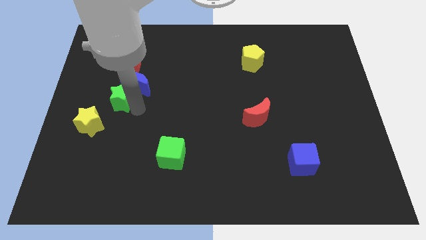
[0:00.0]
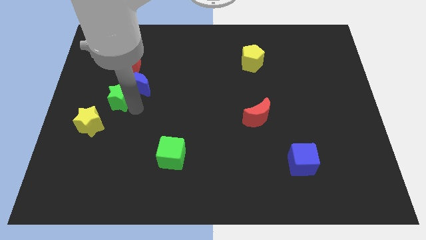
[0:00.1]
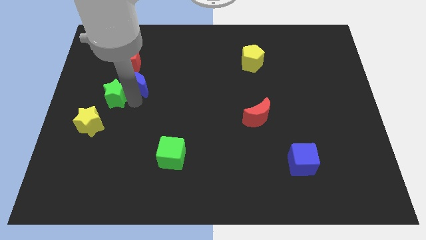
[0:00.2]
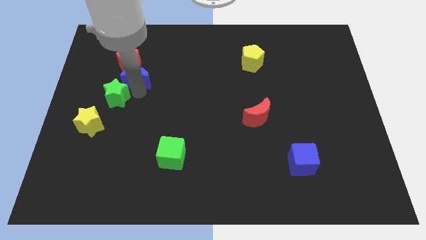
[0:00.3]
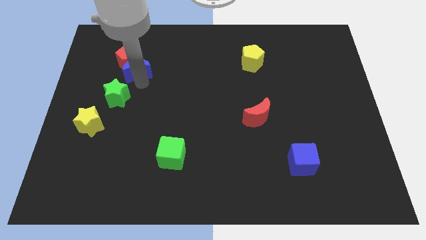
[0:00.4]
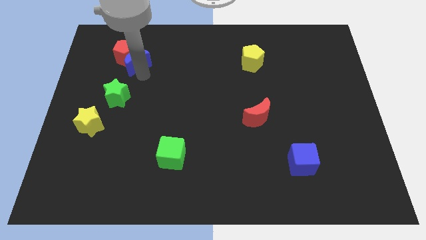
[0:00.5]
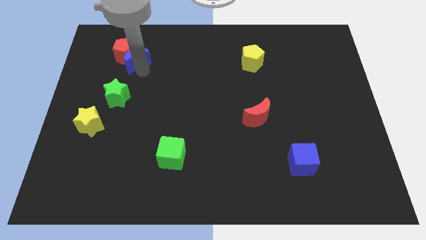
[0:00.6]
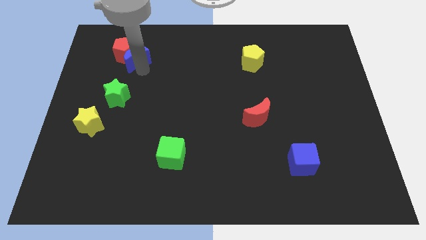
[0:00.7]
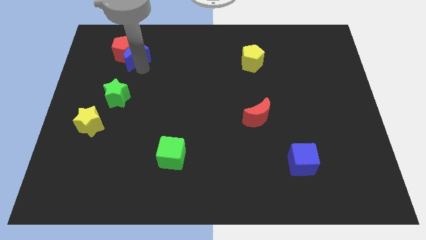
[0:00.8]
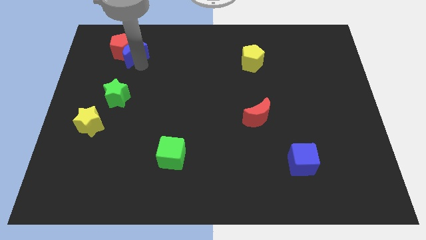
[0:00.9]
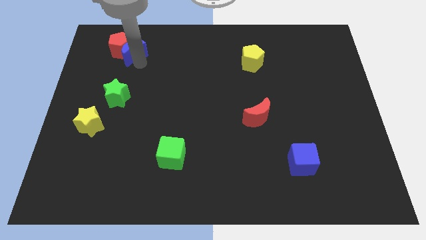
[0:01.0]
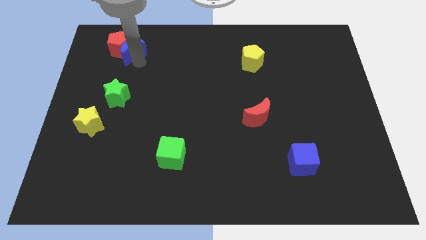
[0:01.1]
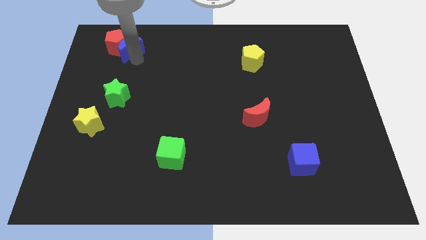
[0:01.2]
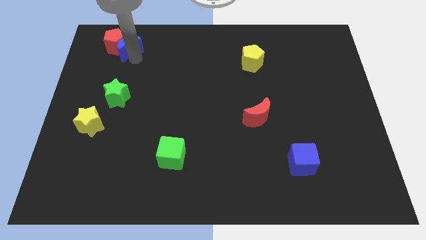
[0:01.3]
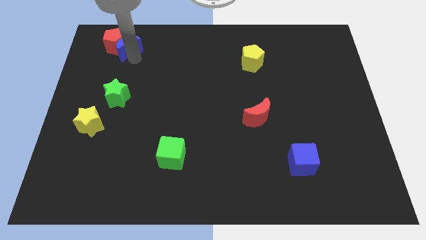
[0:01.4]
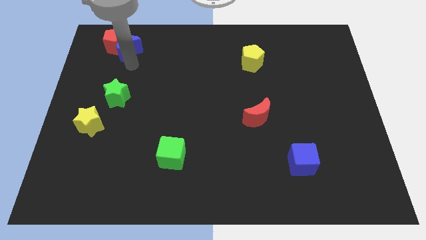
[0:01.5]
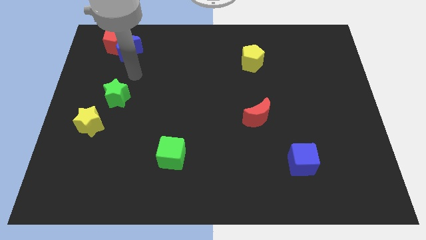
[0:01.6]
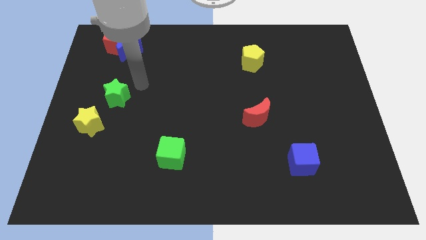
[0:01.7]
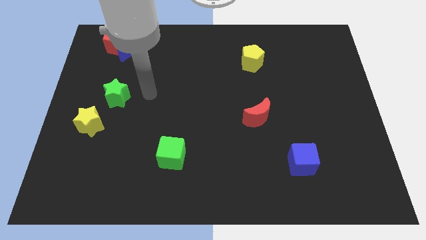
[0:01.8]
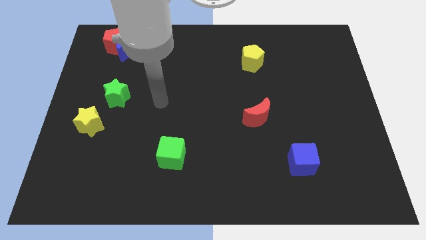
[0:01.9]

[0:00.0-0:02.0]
push the blue moon and red pentagon towards the left side of the board

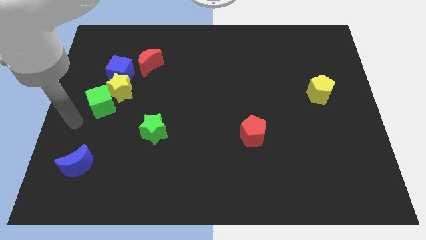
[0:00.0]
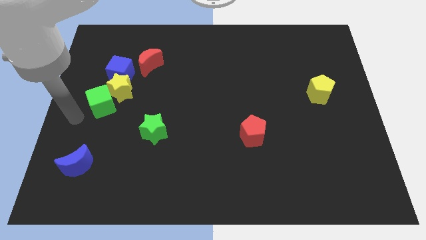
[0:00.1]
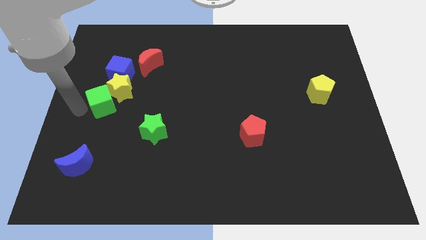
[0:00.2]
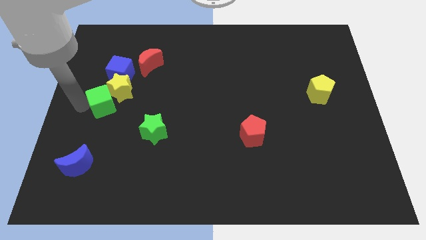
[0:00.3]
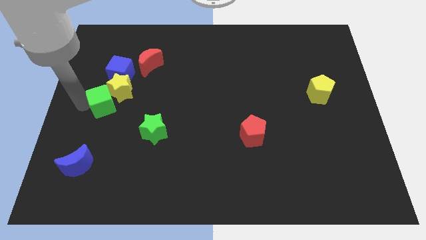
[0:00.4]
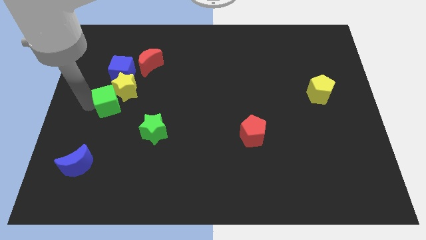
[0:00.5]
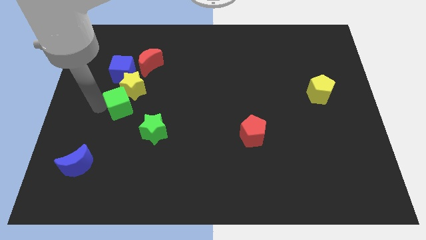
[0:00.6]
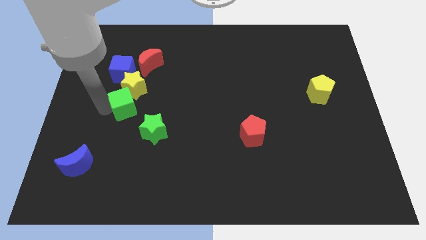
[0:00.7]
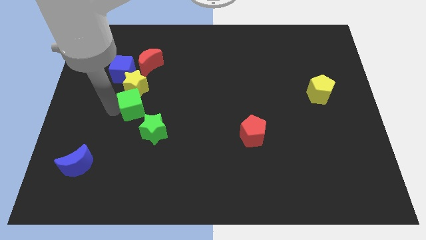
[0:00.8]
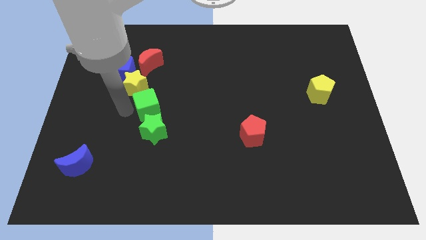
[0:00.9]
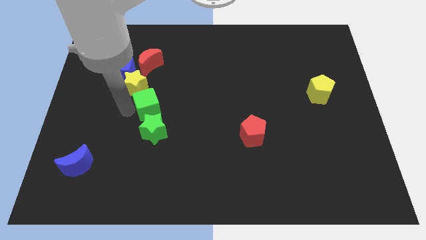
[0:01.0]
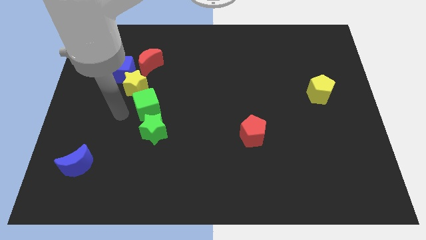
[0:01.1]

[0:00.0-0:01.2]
place green cube between yellow star and green star

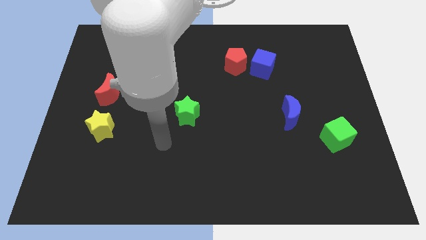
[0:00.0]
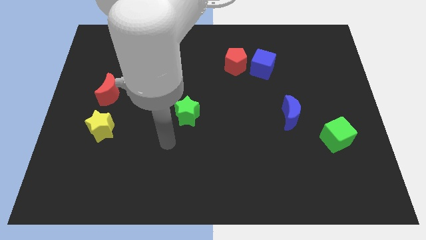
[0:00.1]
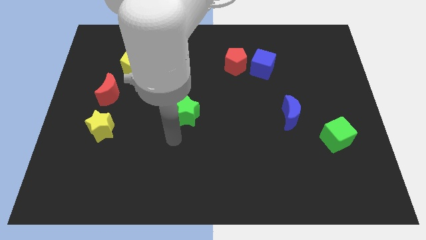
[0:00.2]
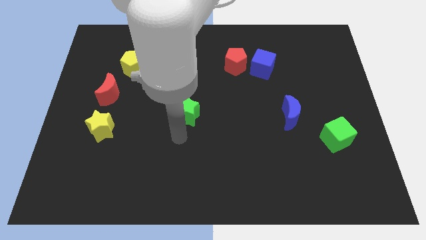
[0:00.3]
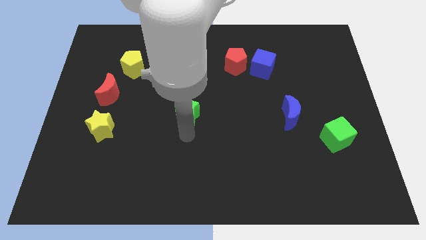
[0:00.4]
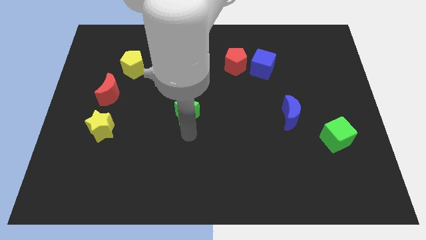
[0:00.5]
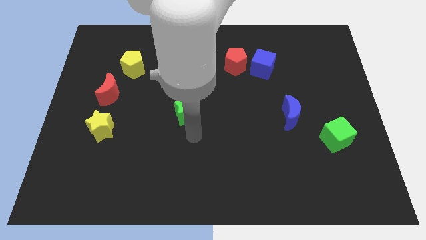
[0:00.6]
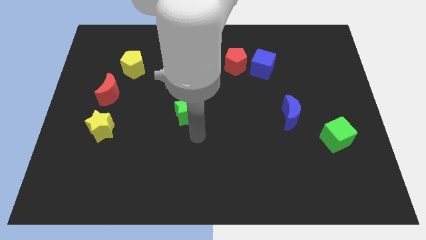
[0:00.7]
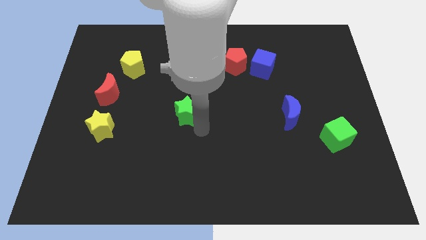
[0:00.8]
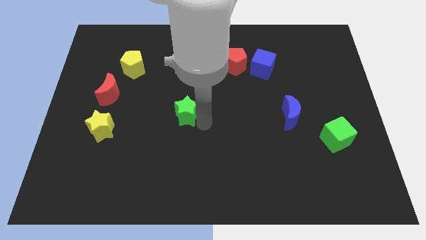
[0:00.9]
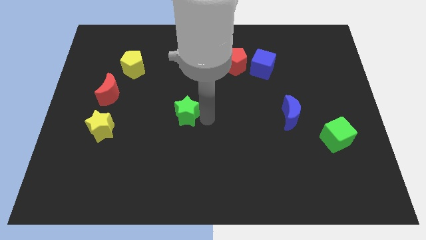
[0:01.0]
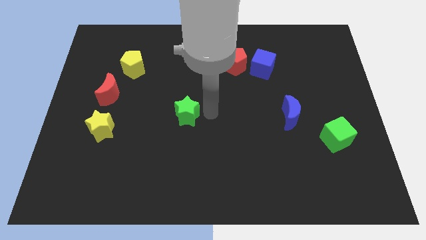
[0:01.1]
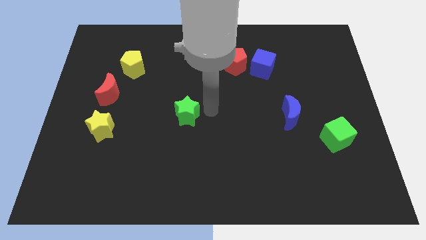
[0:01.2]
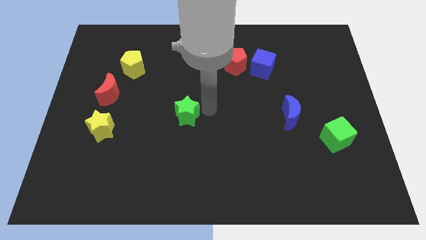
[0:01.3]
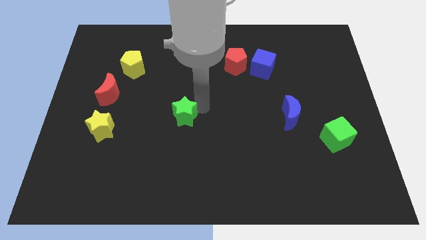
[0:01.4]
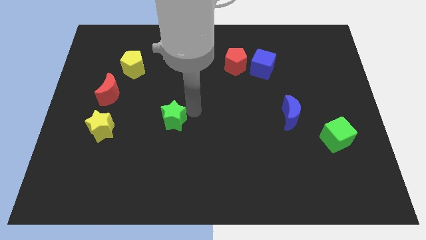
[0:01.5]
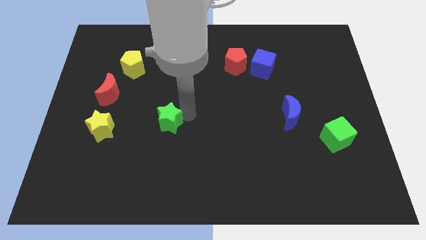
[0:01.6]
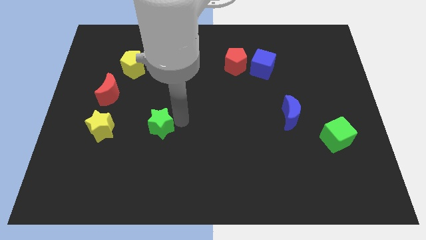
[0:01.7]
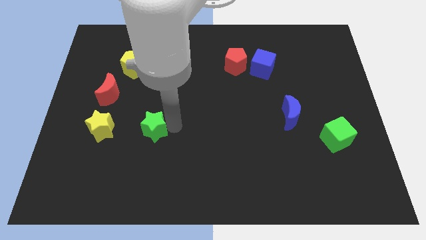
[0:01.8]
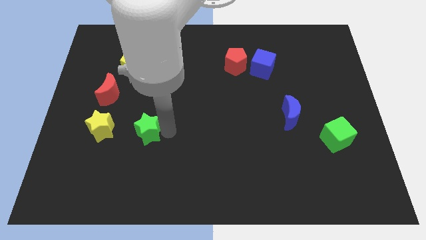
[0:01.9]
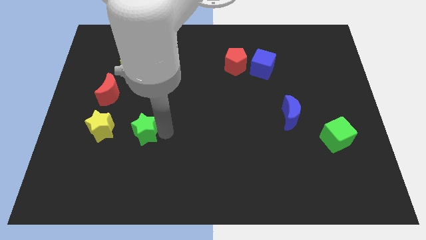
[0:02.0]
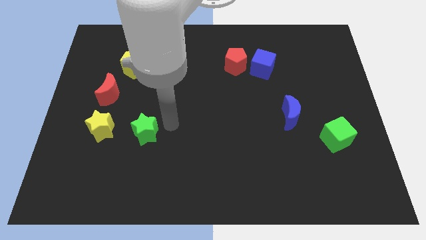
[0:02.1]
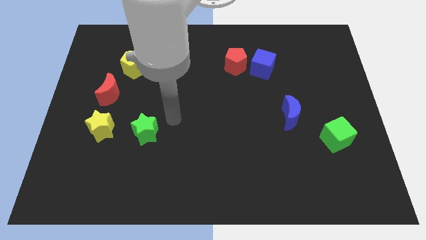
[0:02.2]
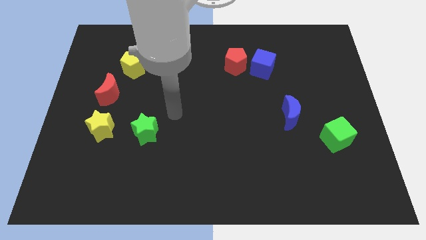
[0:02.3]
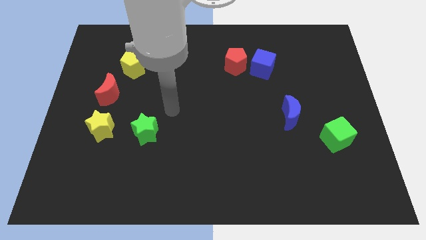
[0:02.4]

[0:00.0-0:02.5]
push the green star to the right of the yellow star

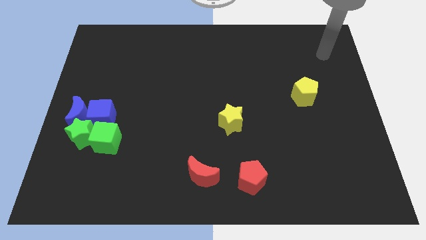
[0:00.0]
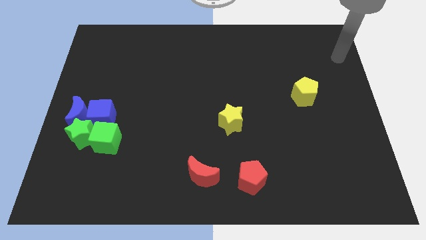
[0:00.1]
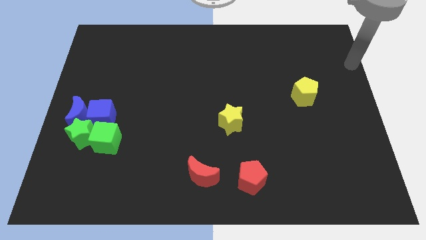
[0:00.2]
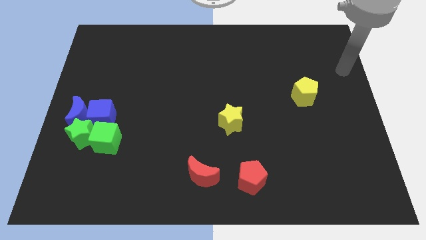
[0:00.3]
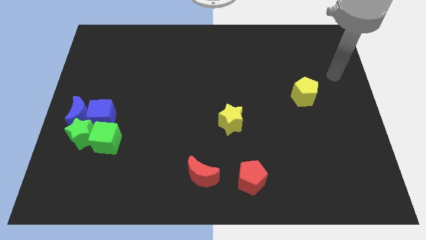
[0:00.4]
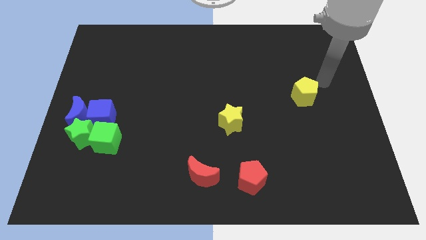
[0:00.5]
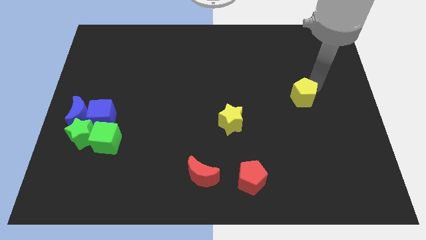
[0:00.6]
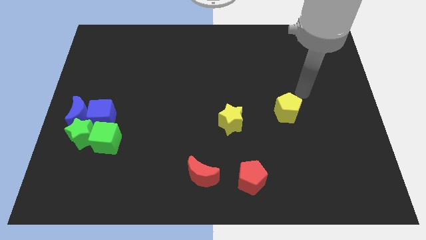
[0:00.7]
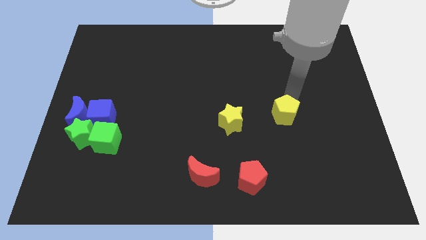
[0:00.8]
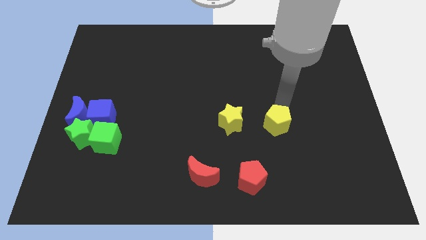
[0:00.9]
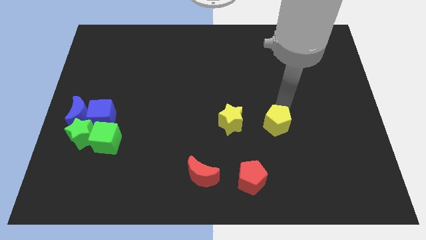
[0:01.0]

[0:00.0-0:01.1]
place the yellow pentagon to the right side of the yellow star

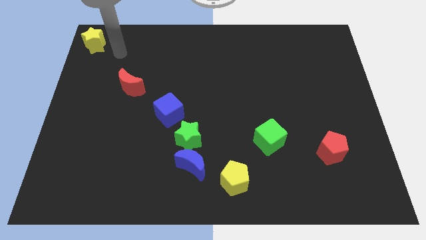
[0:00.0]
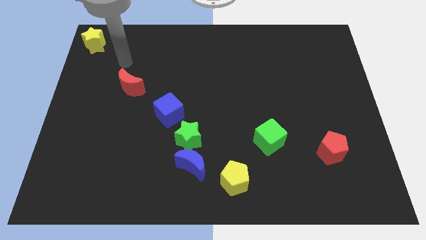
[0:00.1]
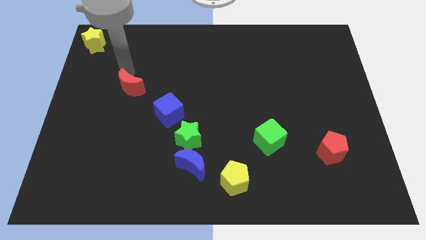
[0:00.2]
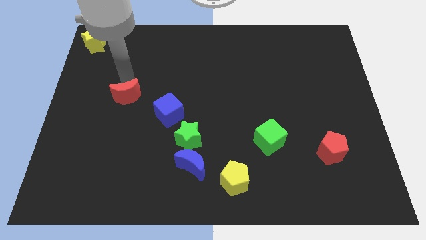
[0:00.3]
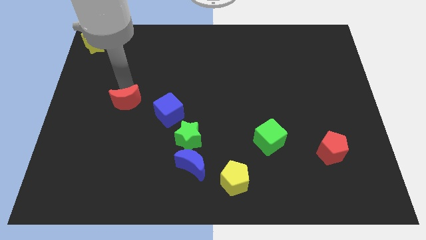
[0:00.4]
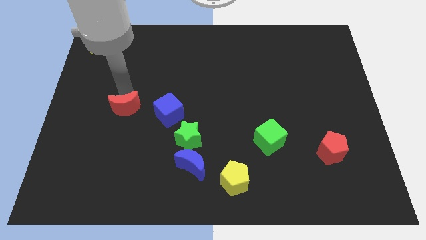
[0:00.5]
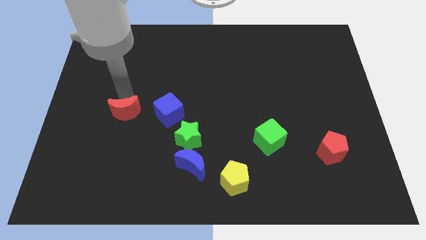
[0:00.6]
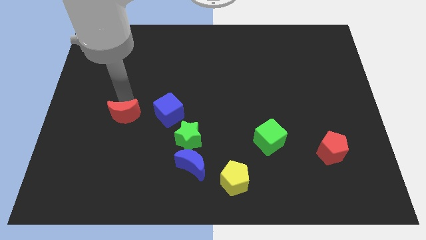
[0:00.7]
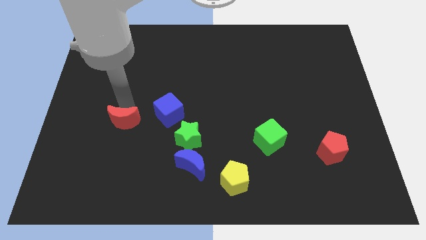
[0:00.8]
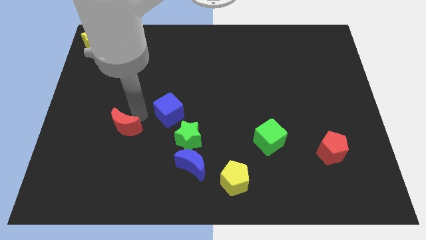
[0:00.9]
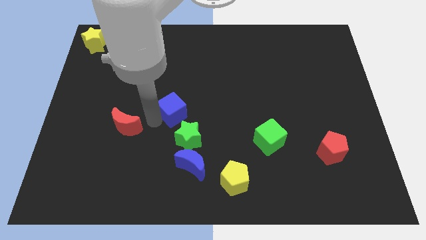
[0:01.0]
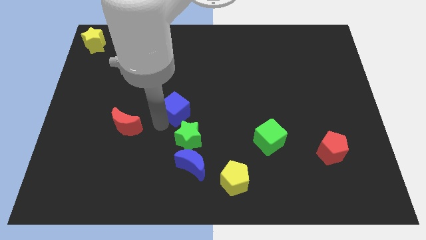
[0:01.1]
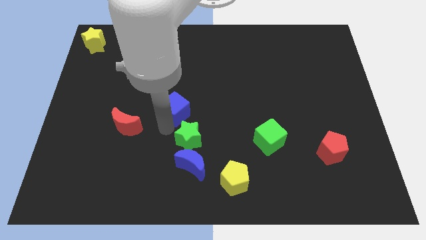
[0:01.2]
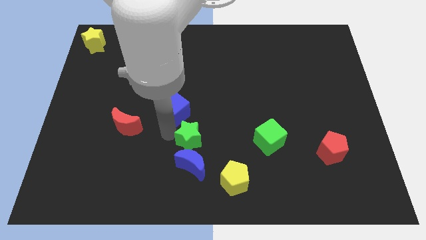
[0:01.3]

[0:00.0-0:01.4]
move the red crescent to the left of blue cube

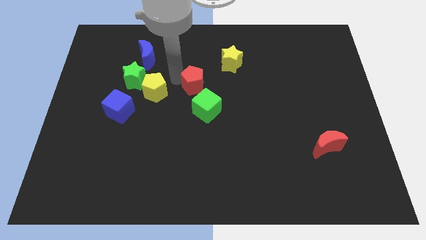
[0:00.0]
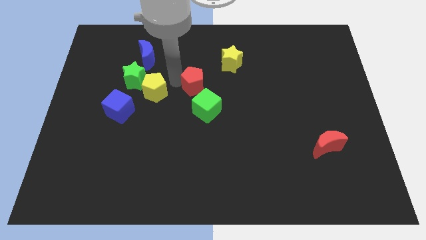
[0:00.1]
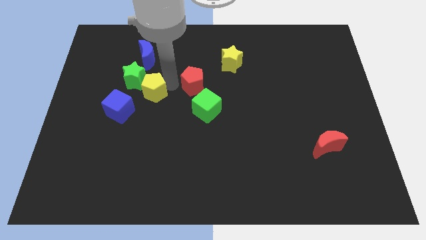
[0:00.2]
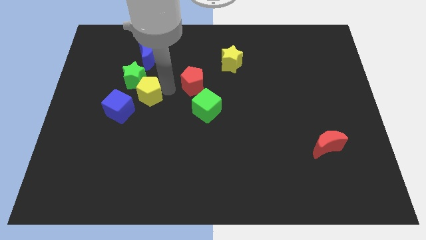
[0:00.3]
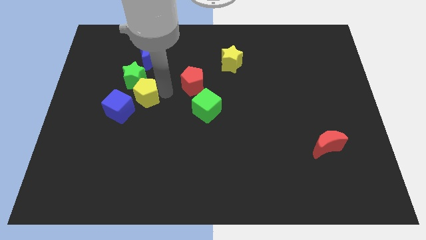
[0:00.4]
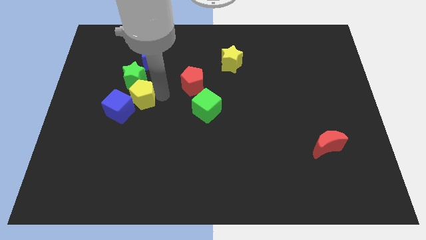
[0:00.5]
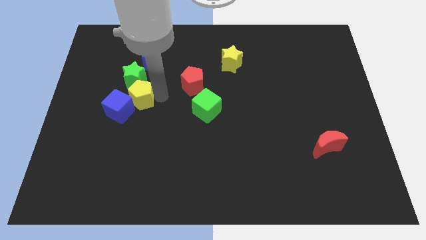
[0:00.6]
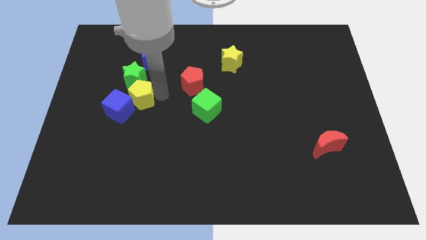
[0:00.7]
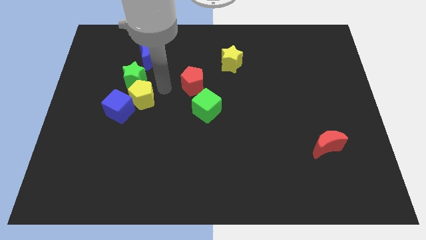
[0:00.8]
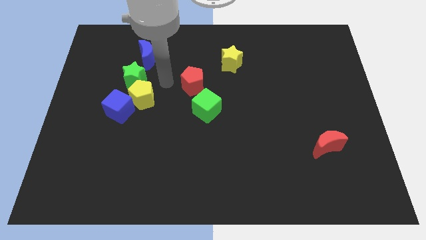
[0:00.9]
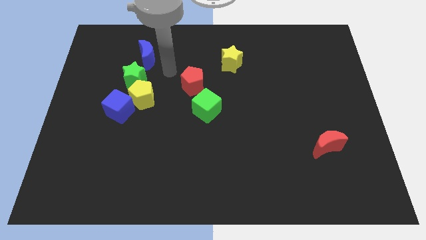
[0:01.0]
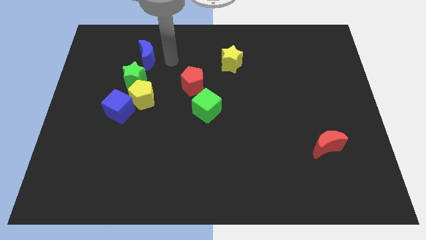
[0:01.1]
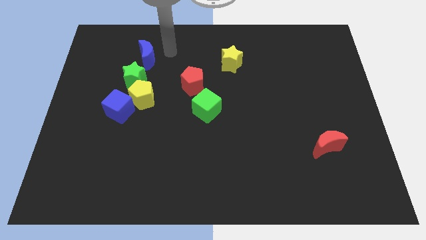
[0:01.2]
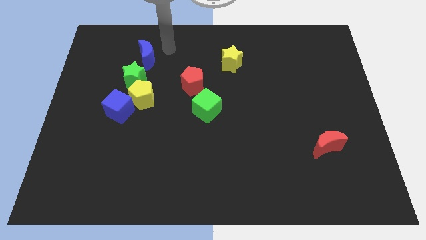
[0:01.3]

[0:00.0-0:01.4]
push the yellow pentagon into the blue cube
